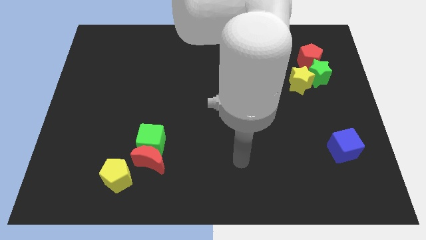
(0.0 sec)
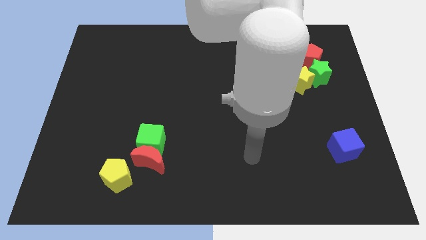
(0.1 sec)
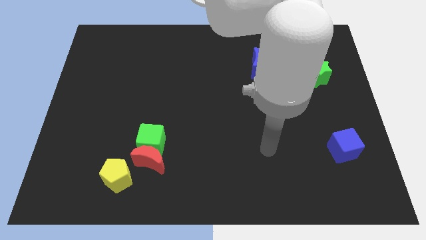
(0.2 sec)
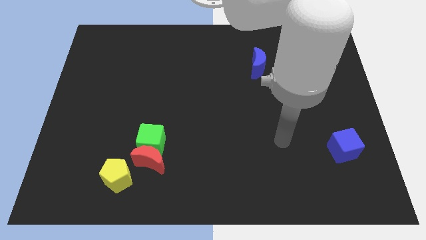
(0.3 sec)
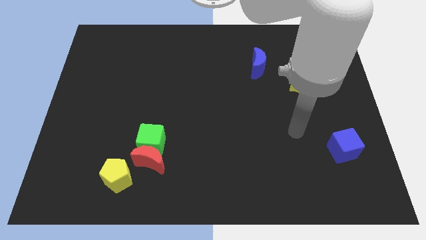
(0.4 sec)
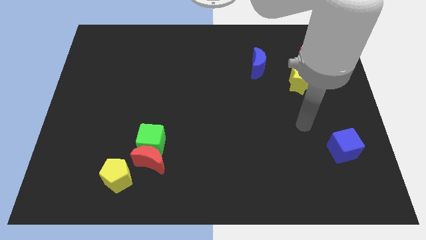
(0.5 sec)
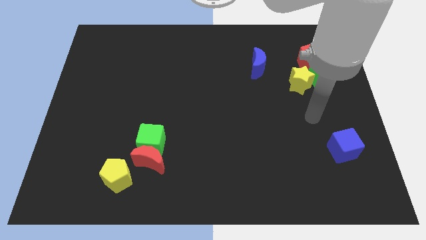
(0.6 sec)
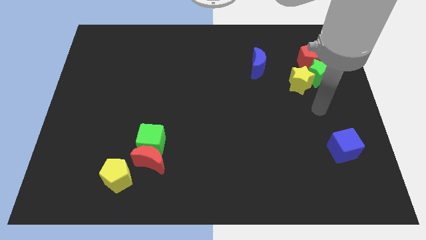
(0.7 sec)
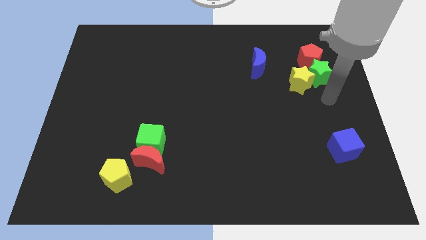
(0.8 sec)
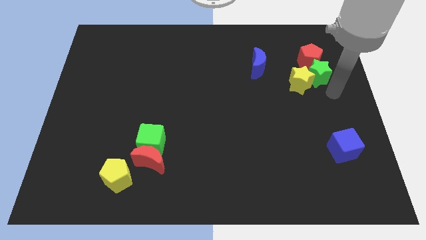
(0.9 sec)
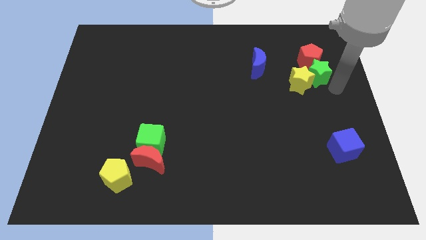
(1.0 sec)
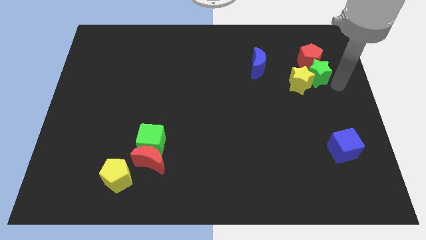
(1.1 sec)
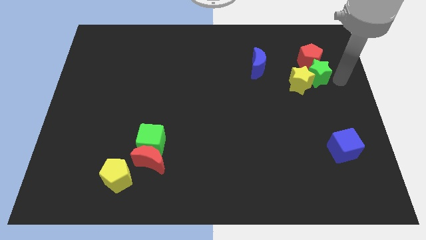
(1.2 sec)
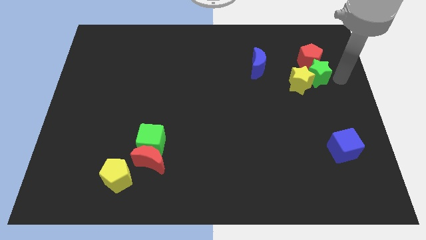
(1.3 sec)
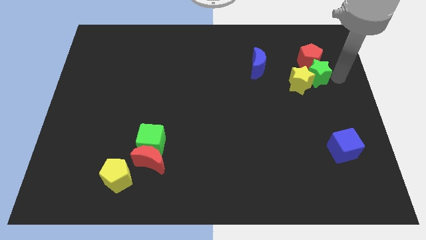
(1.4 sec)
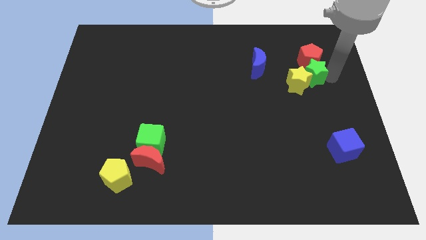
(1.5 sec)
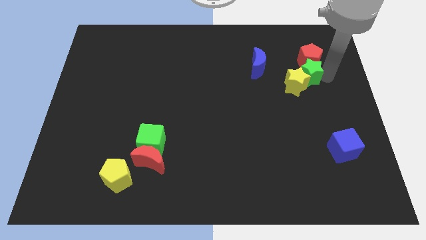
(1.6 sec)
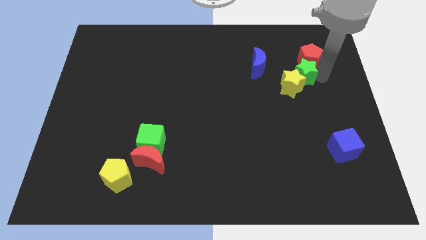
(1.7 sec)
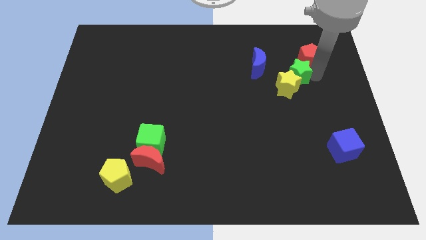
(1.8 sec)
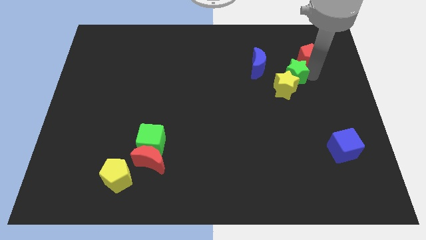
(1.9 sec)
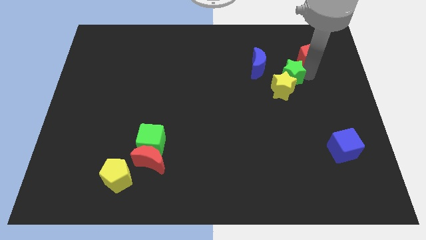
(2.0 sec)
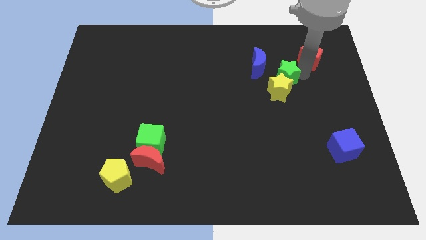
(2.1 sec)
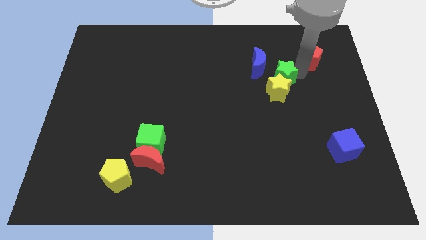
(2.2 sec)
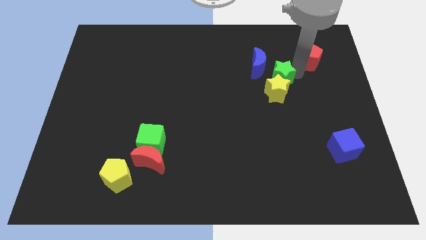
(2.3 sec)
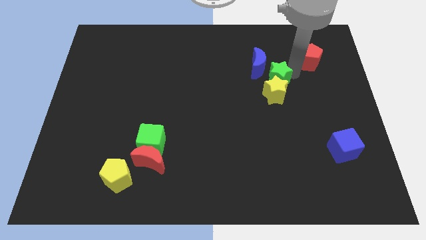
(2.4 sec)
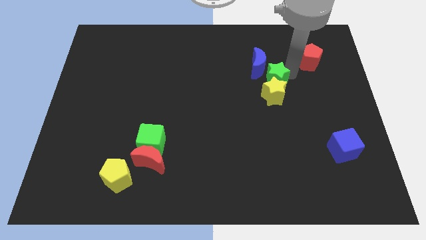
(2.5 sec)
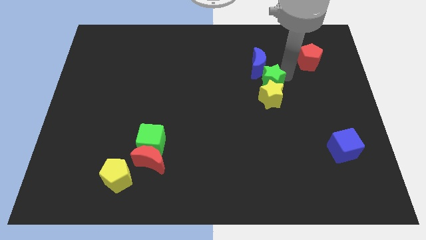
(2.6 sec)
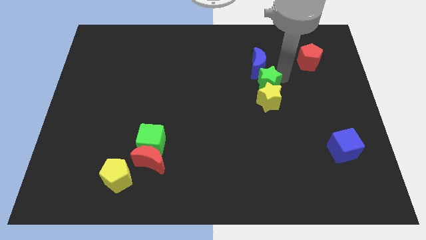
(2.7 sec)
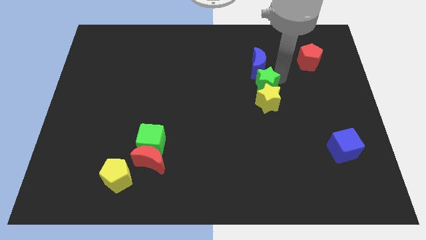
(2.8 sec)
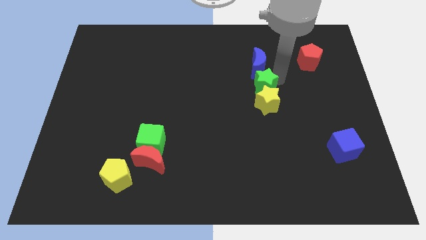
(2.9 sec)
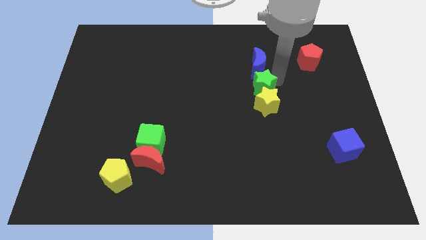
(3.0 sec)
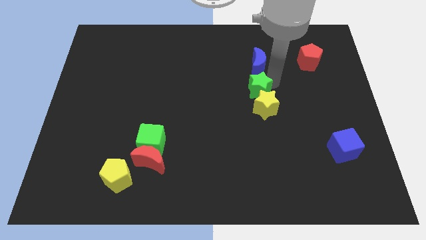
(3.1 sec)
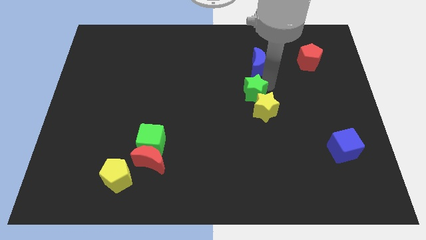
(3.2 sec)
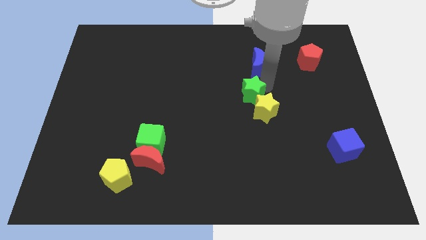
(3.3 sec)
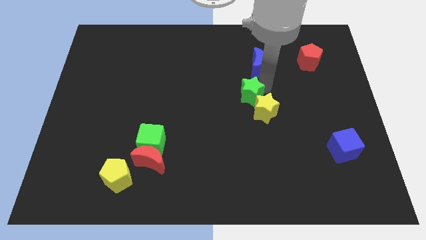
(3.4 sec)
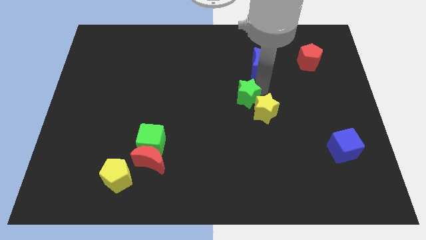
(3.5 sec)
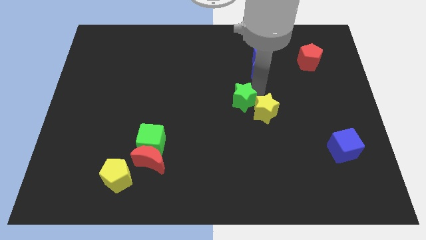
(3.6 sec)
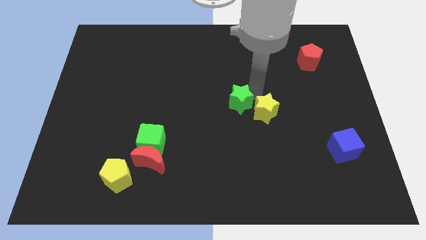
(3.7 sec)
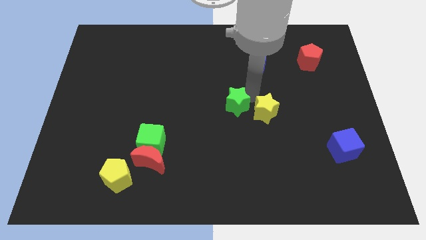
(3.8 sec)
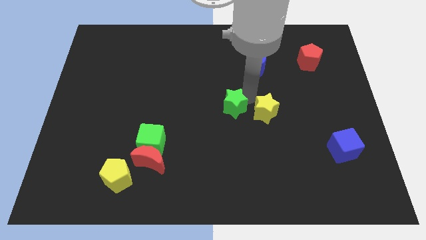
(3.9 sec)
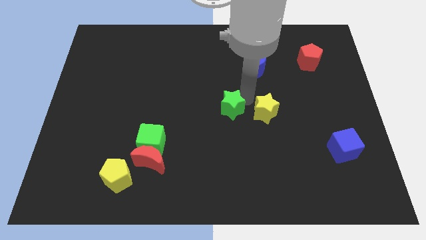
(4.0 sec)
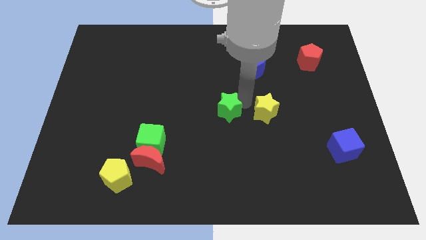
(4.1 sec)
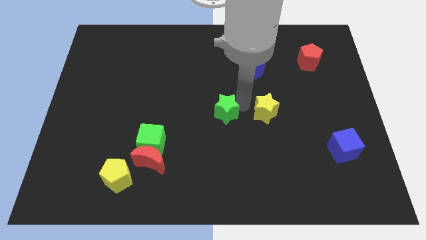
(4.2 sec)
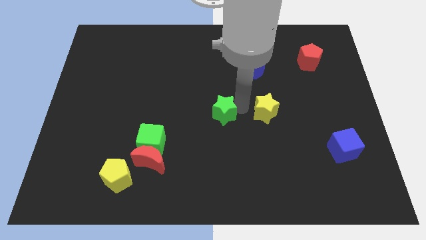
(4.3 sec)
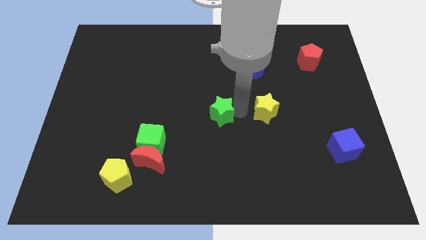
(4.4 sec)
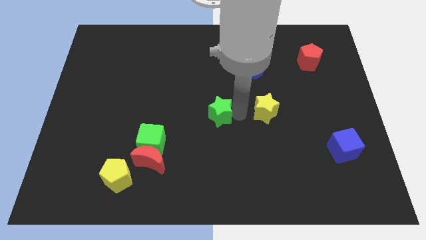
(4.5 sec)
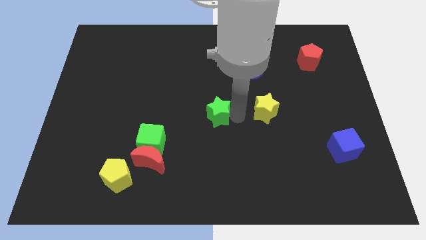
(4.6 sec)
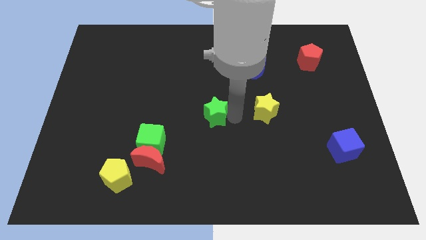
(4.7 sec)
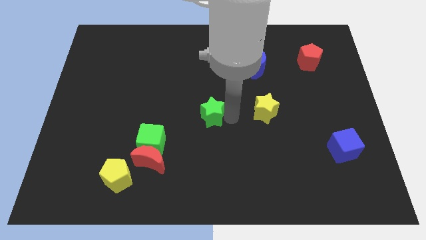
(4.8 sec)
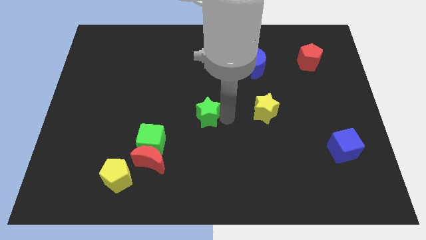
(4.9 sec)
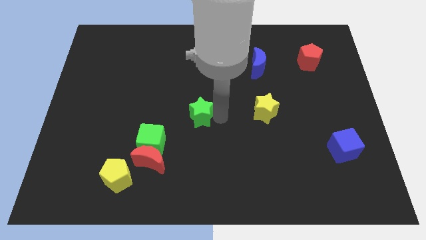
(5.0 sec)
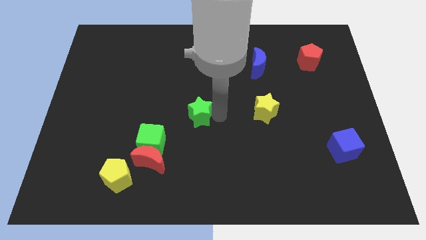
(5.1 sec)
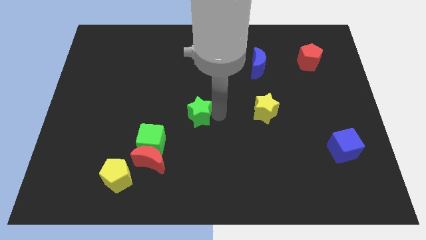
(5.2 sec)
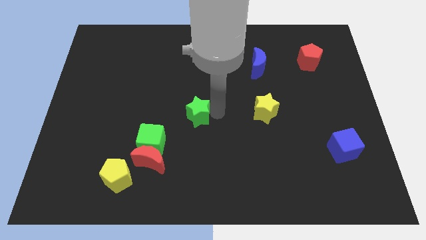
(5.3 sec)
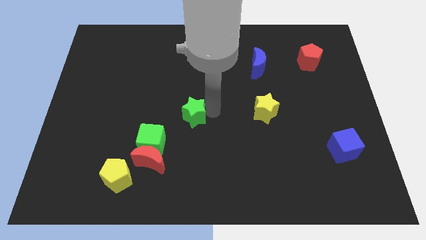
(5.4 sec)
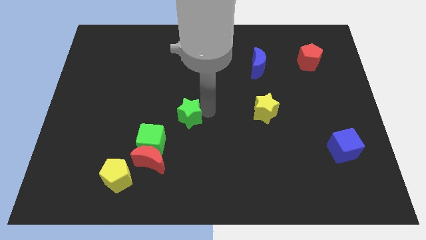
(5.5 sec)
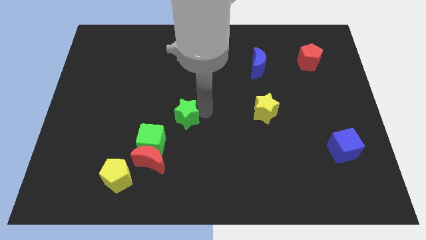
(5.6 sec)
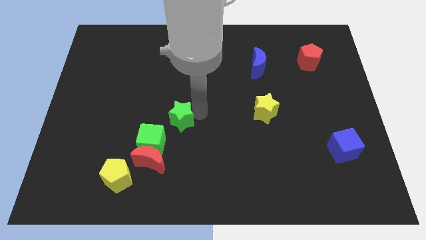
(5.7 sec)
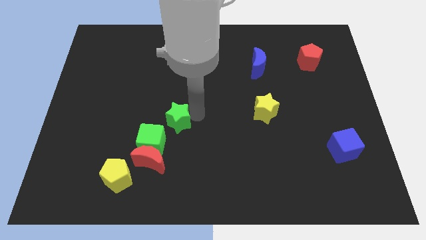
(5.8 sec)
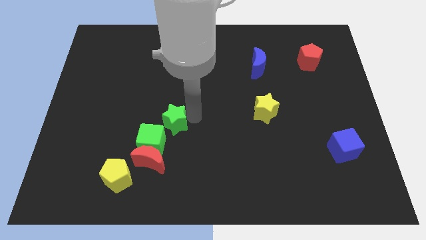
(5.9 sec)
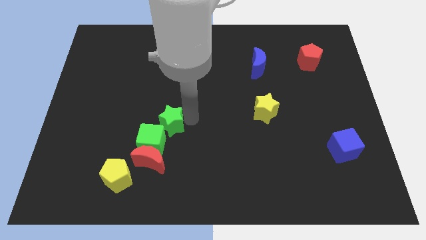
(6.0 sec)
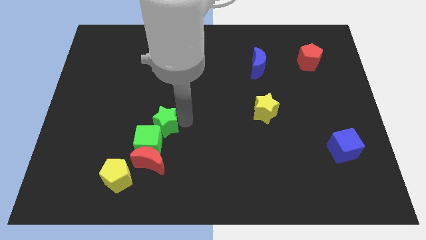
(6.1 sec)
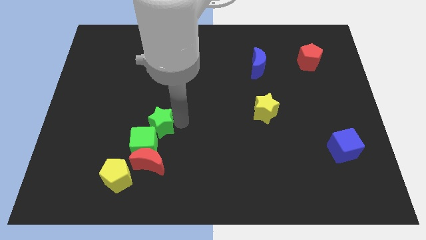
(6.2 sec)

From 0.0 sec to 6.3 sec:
push the green star towards the green cube

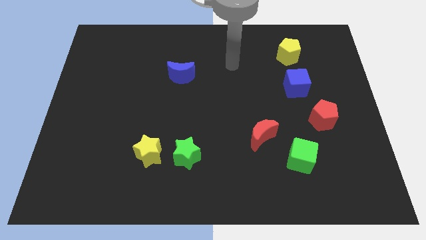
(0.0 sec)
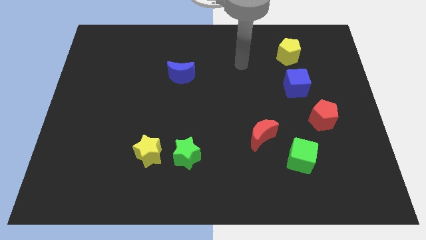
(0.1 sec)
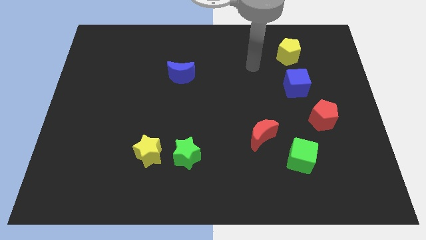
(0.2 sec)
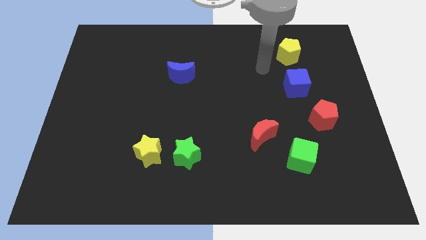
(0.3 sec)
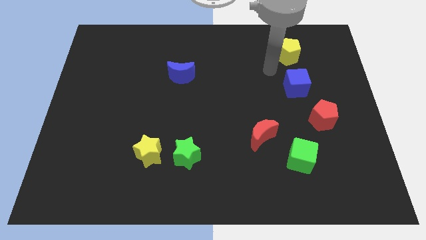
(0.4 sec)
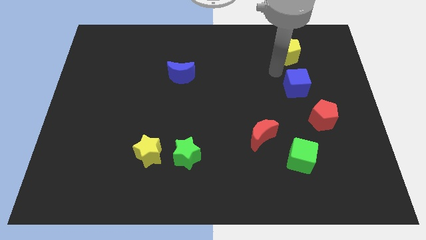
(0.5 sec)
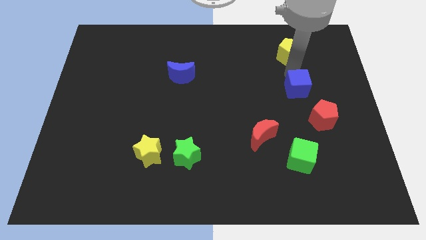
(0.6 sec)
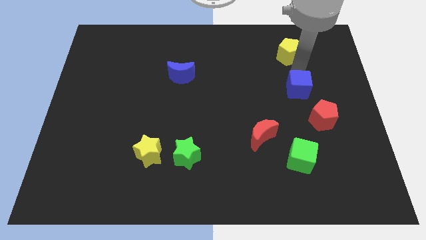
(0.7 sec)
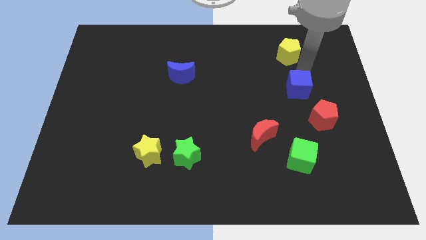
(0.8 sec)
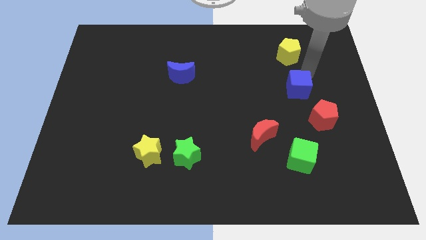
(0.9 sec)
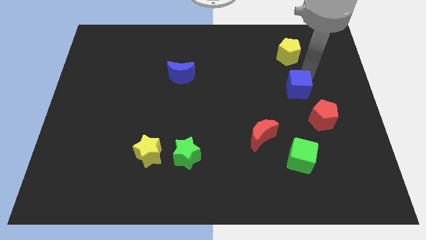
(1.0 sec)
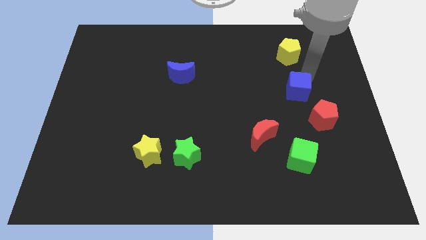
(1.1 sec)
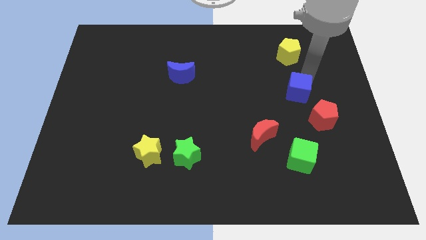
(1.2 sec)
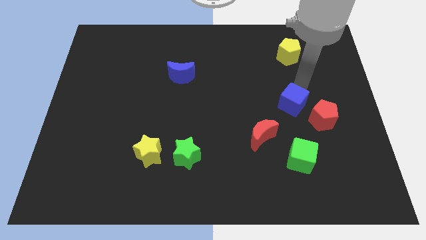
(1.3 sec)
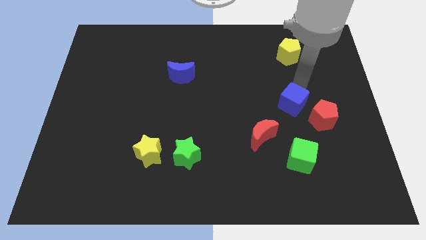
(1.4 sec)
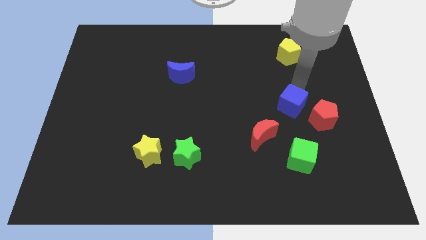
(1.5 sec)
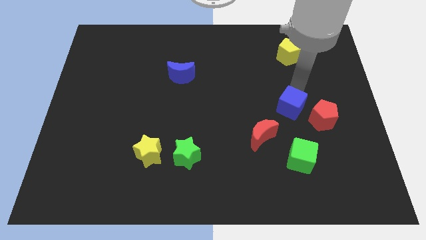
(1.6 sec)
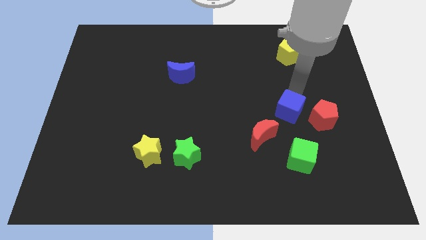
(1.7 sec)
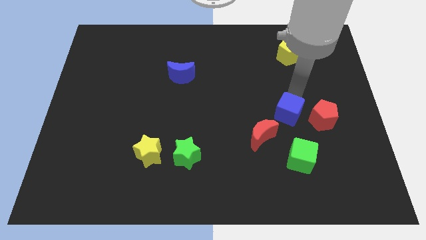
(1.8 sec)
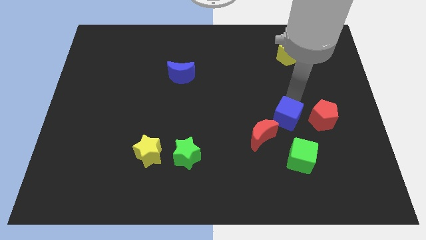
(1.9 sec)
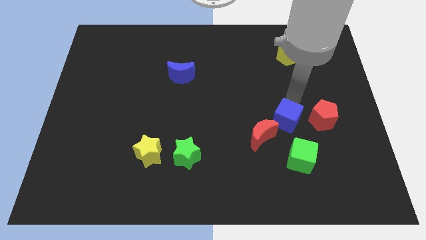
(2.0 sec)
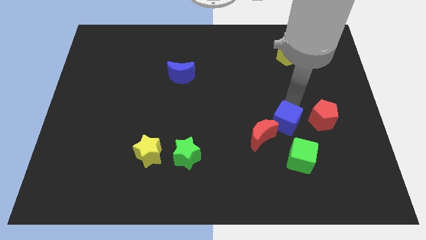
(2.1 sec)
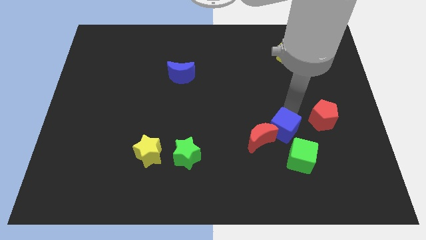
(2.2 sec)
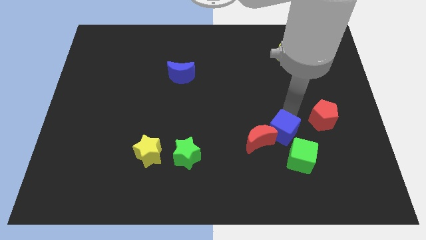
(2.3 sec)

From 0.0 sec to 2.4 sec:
slide the blue cube towards the red moon
